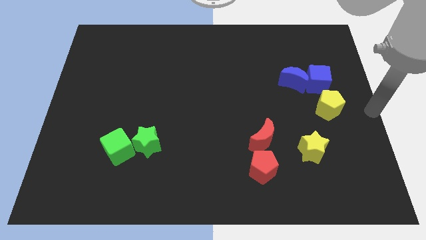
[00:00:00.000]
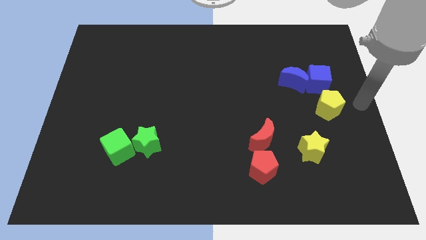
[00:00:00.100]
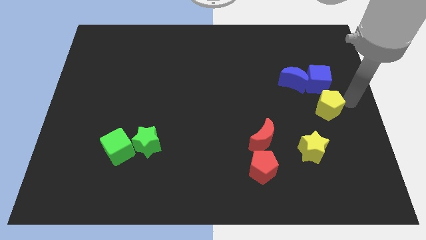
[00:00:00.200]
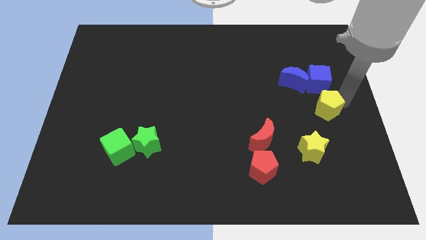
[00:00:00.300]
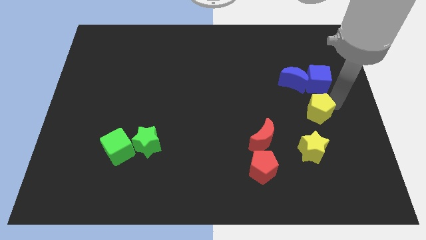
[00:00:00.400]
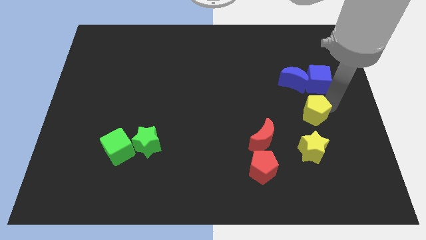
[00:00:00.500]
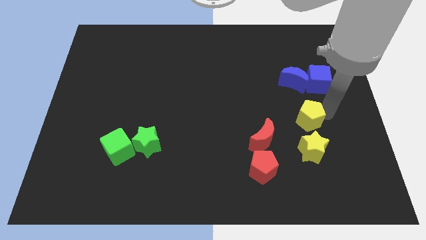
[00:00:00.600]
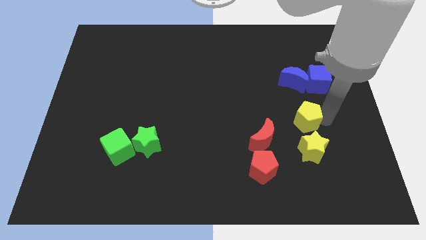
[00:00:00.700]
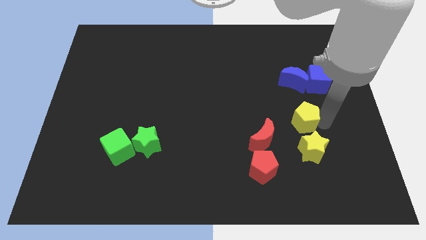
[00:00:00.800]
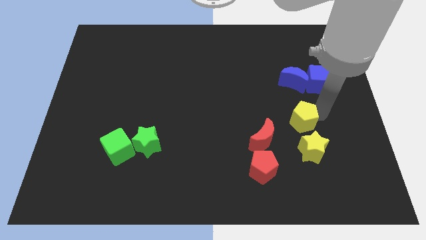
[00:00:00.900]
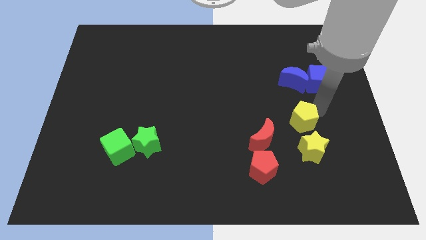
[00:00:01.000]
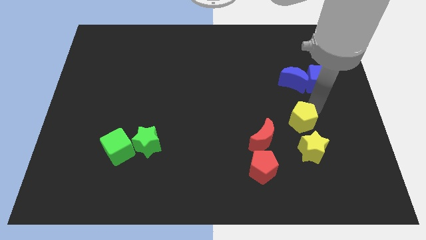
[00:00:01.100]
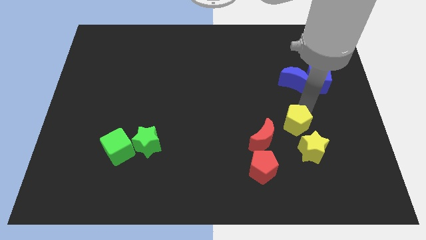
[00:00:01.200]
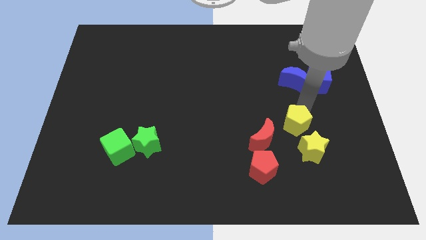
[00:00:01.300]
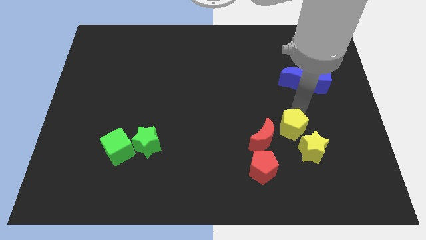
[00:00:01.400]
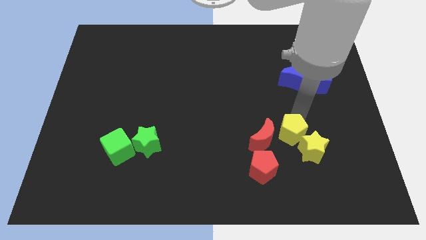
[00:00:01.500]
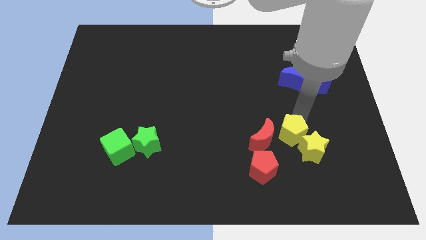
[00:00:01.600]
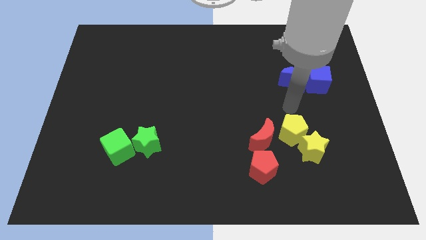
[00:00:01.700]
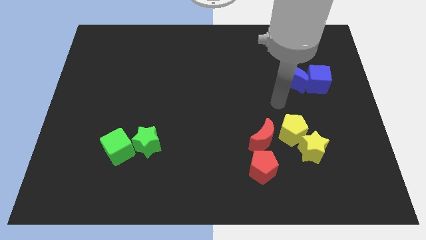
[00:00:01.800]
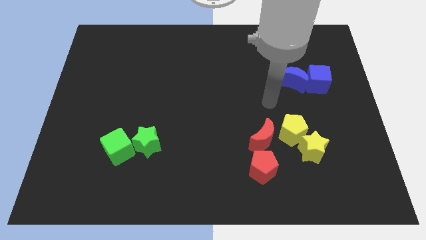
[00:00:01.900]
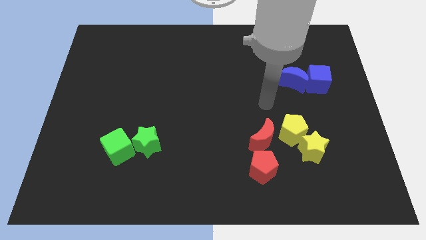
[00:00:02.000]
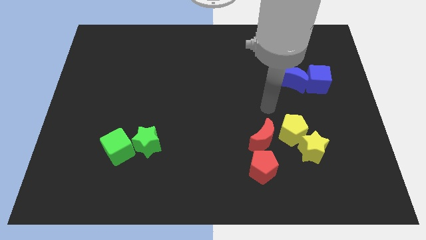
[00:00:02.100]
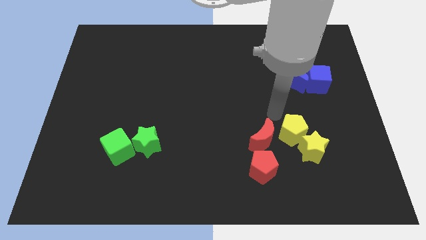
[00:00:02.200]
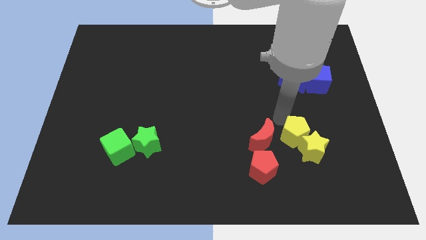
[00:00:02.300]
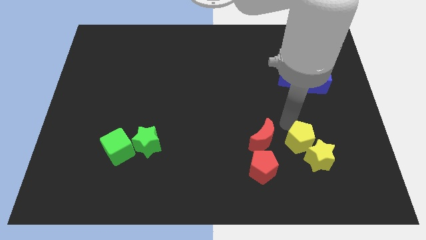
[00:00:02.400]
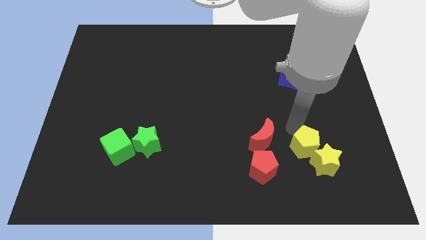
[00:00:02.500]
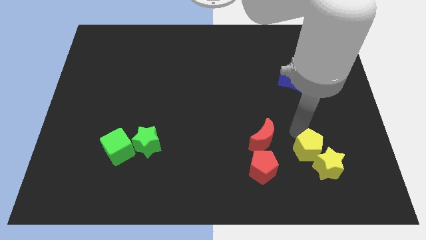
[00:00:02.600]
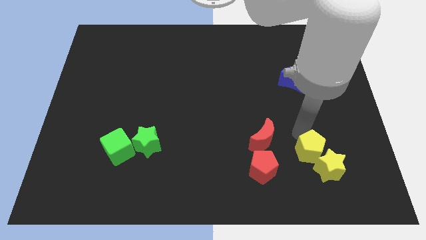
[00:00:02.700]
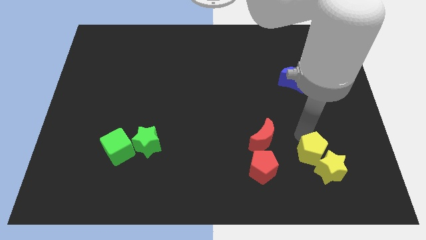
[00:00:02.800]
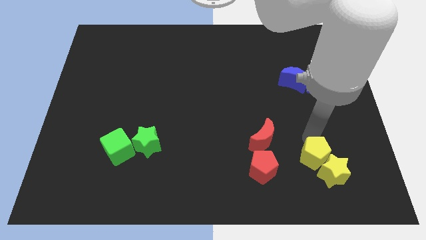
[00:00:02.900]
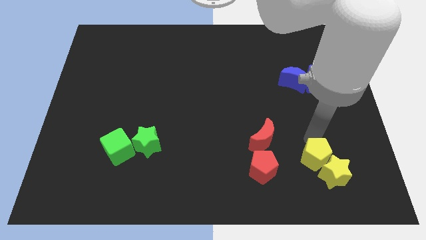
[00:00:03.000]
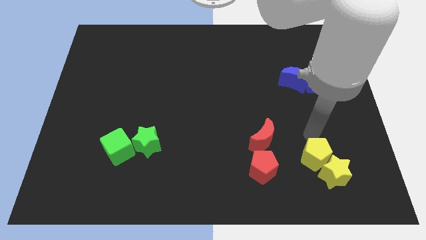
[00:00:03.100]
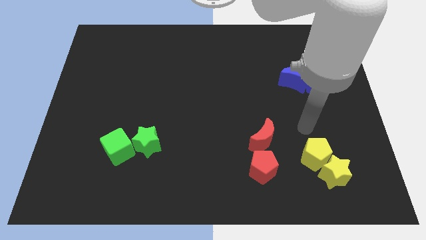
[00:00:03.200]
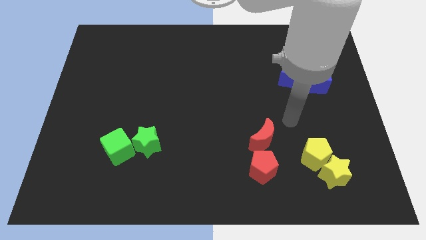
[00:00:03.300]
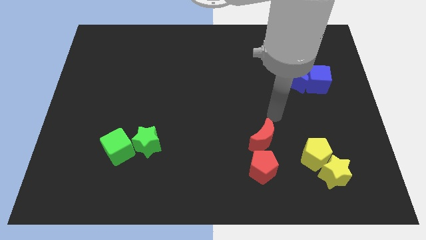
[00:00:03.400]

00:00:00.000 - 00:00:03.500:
push both the yellow blocks to the bottom right side of the board

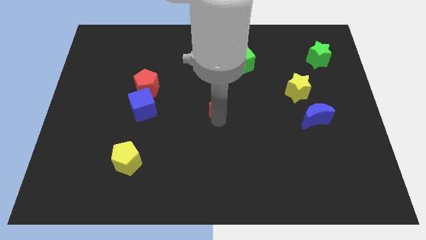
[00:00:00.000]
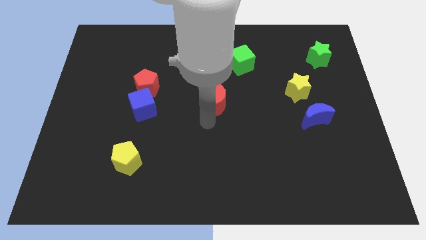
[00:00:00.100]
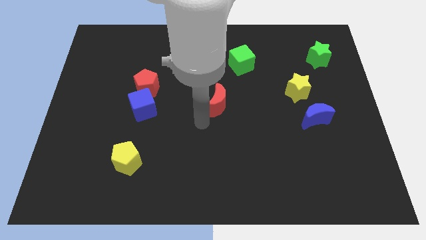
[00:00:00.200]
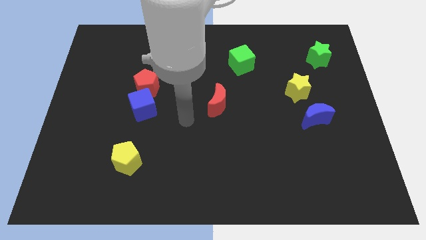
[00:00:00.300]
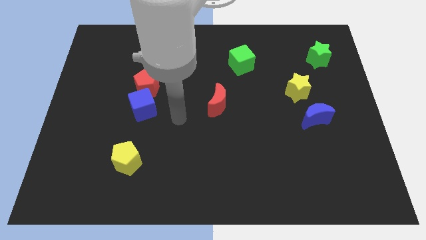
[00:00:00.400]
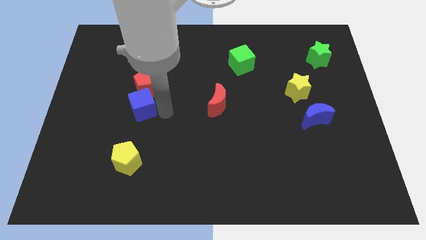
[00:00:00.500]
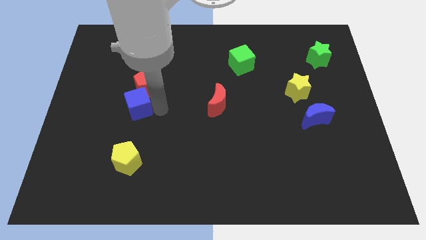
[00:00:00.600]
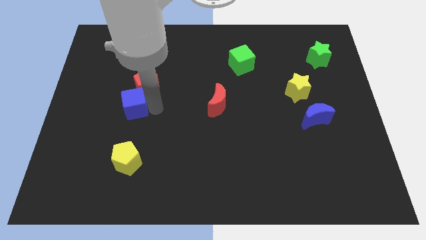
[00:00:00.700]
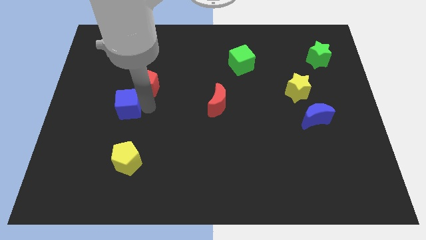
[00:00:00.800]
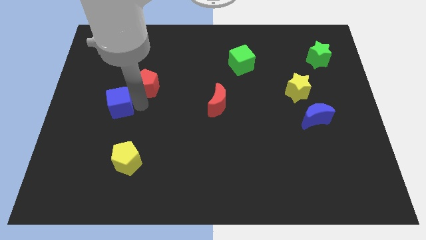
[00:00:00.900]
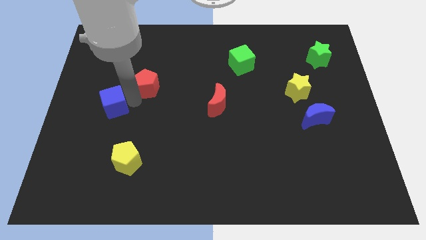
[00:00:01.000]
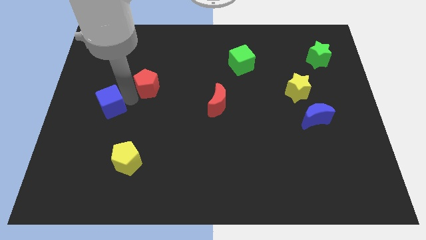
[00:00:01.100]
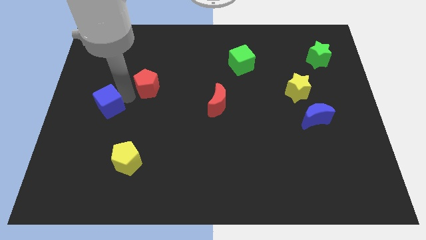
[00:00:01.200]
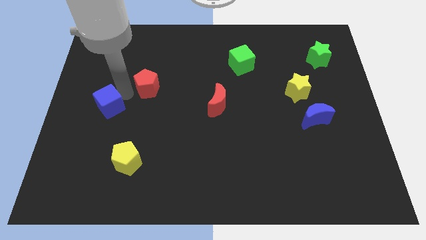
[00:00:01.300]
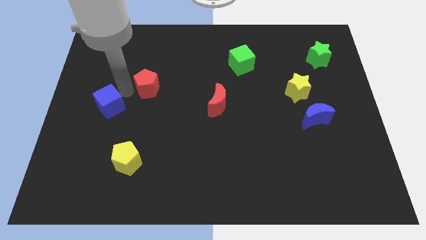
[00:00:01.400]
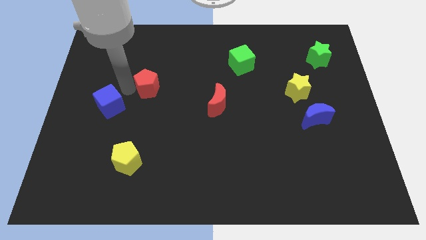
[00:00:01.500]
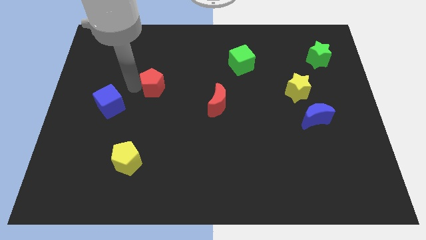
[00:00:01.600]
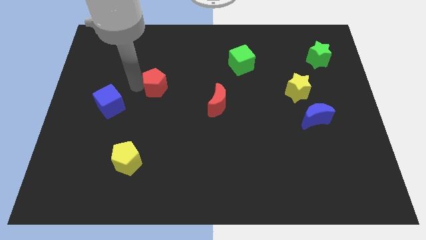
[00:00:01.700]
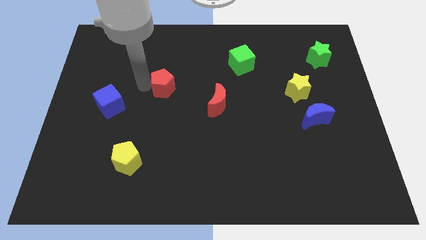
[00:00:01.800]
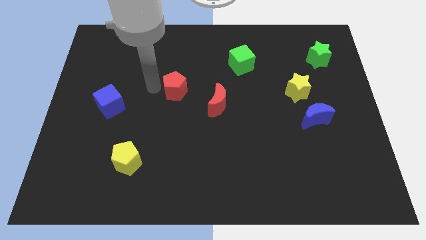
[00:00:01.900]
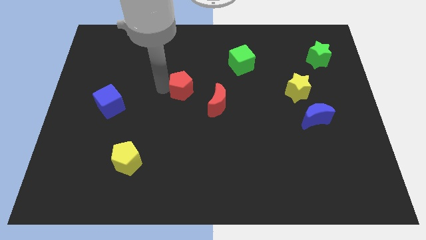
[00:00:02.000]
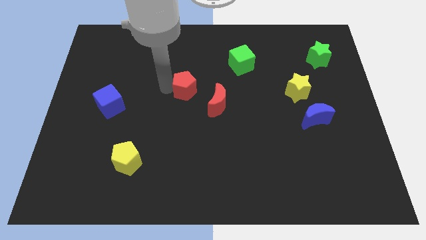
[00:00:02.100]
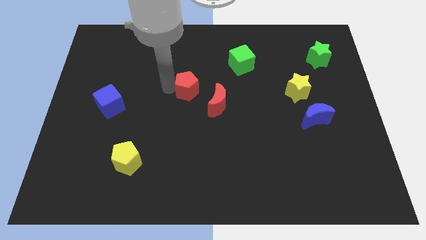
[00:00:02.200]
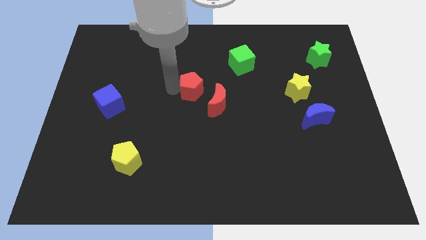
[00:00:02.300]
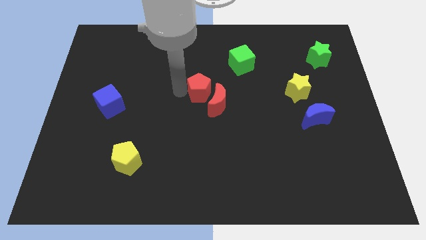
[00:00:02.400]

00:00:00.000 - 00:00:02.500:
separate blue cube and red pentagon

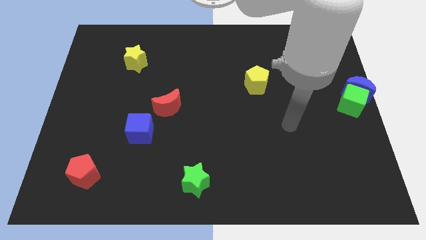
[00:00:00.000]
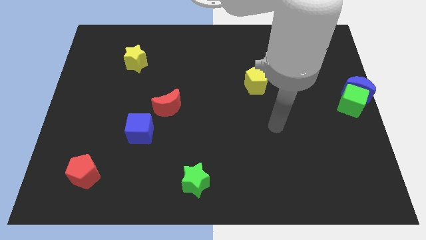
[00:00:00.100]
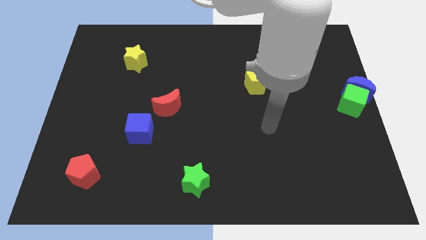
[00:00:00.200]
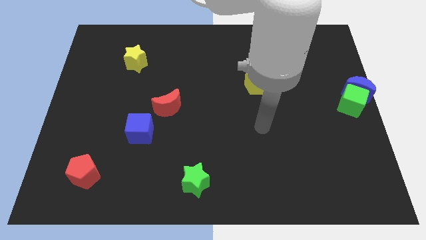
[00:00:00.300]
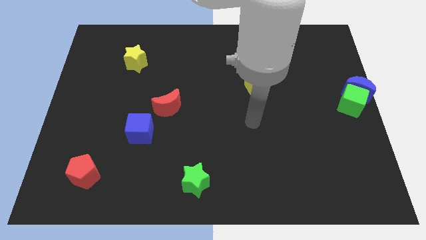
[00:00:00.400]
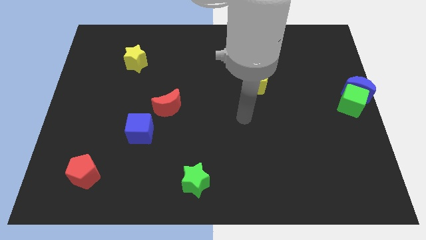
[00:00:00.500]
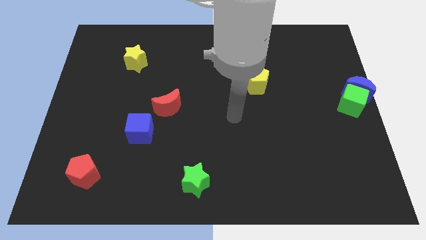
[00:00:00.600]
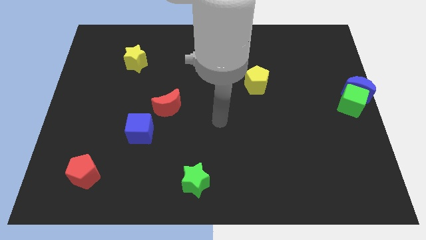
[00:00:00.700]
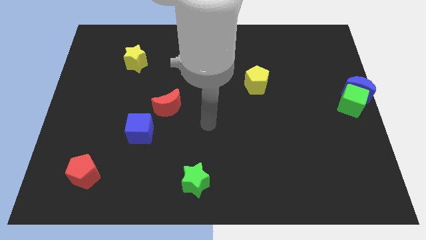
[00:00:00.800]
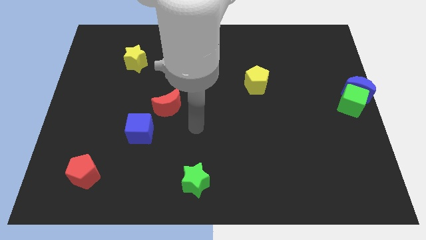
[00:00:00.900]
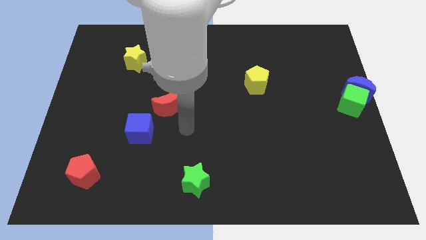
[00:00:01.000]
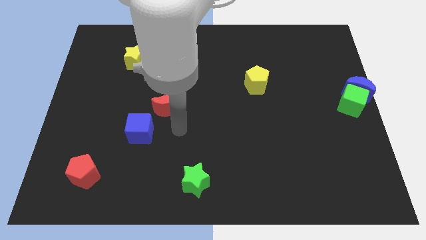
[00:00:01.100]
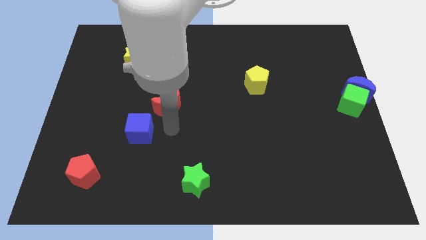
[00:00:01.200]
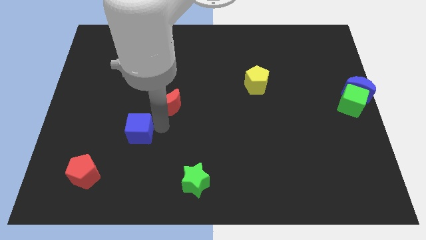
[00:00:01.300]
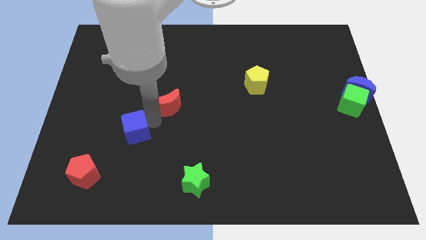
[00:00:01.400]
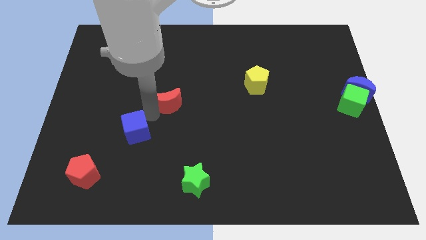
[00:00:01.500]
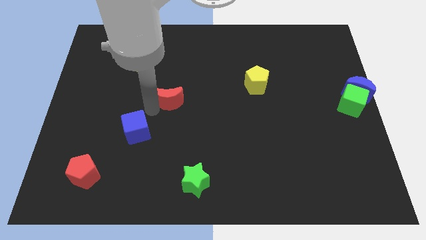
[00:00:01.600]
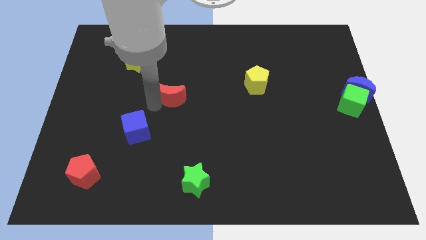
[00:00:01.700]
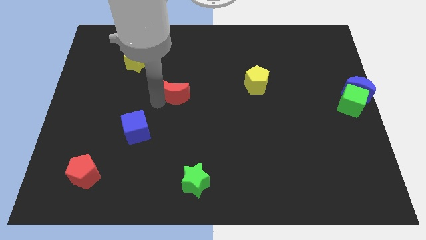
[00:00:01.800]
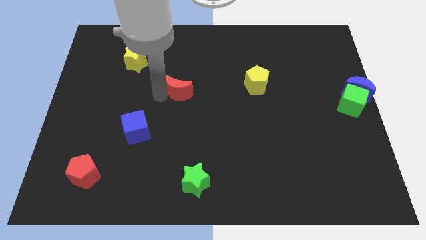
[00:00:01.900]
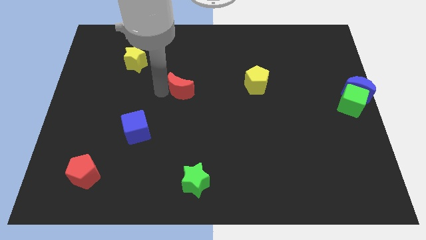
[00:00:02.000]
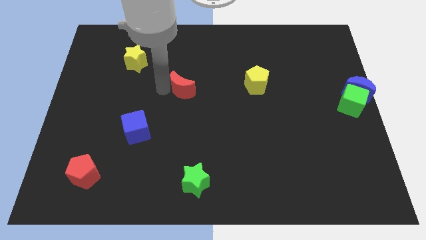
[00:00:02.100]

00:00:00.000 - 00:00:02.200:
separate blue cube and red crescent

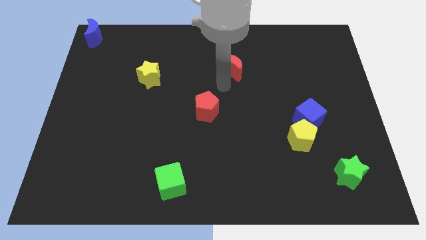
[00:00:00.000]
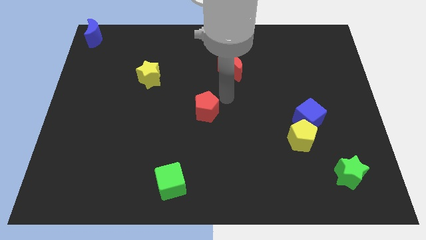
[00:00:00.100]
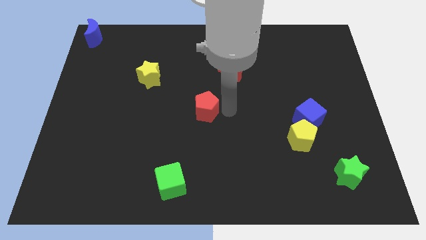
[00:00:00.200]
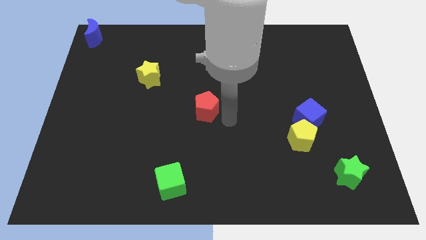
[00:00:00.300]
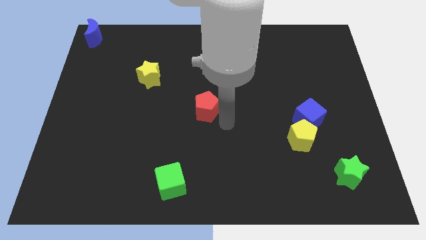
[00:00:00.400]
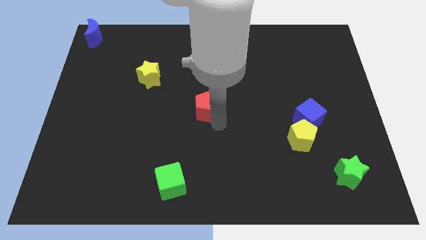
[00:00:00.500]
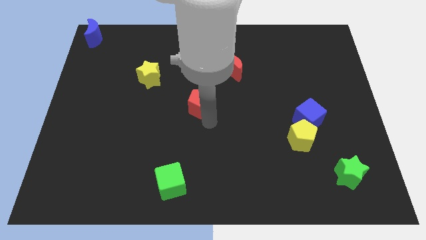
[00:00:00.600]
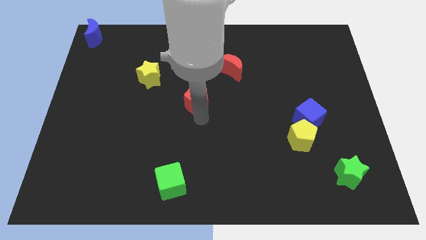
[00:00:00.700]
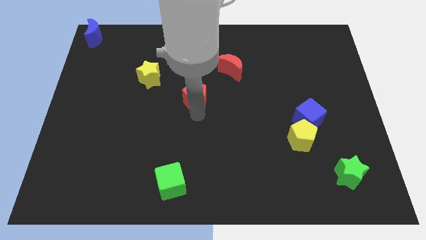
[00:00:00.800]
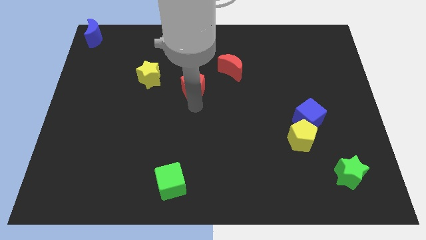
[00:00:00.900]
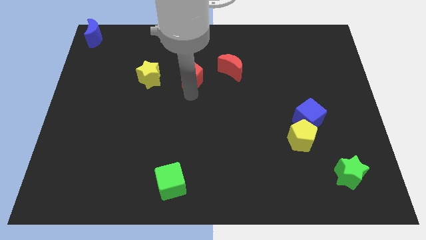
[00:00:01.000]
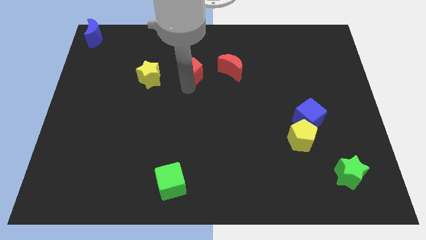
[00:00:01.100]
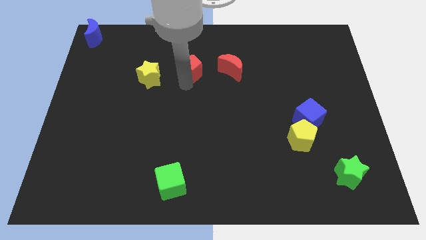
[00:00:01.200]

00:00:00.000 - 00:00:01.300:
push the red pentagon to the right of the yellow star
